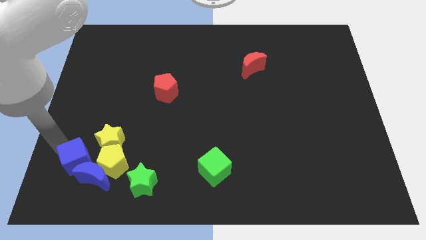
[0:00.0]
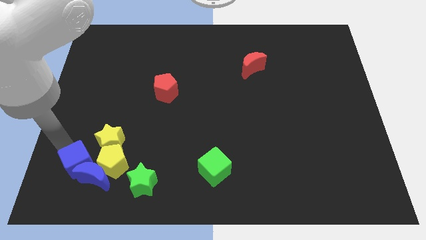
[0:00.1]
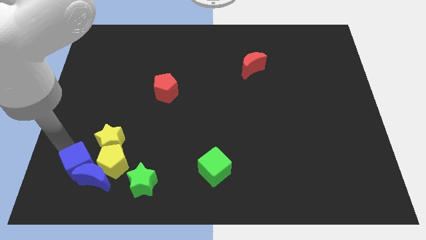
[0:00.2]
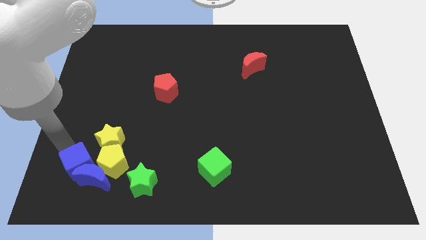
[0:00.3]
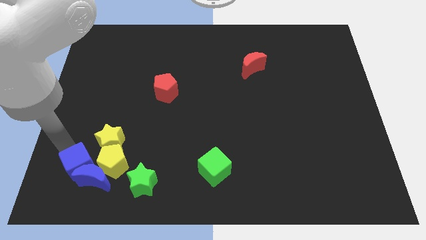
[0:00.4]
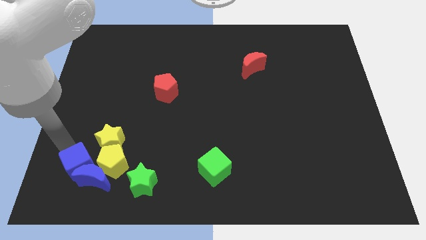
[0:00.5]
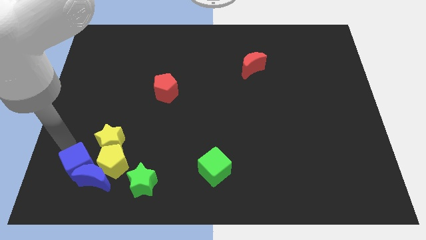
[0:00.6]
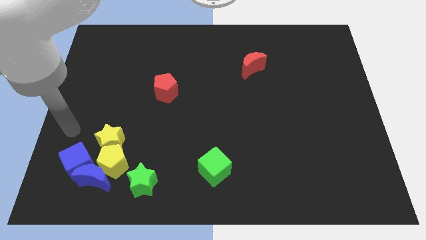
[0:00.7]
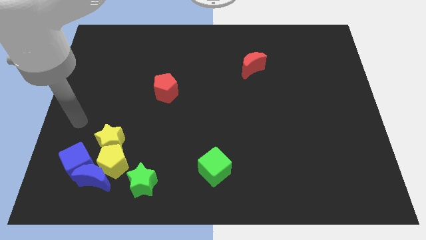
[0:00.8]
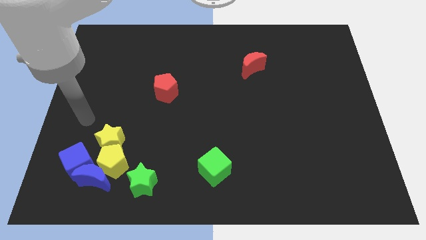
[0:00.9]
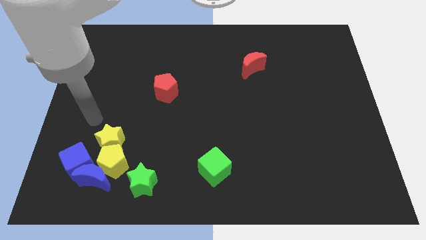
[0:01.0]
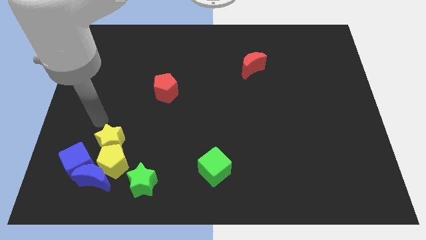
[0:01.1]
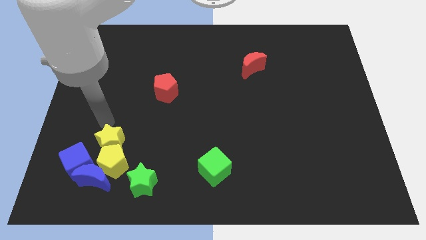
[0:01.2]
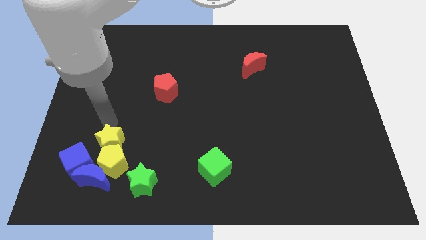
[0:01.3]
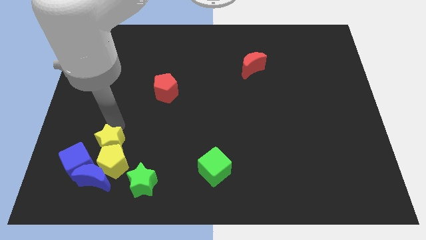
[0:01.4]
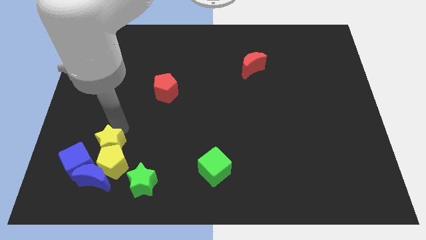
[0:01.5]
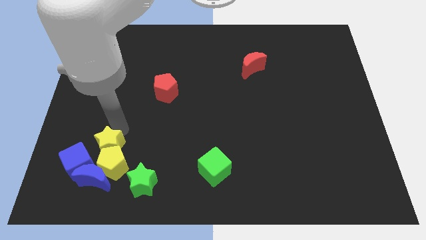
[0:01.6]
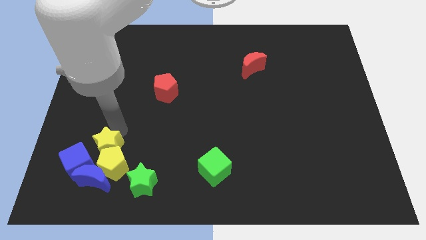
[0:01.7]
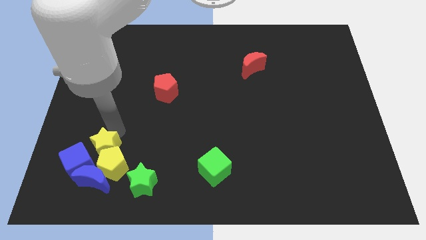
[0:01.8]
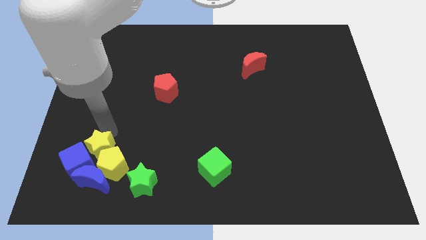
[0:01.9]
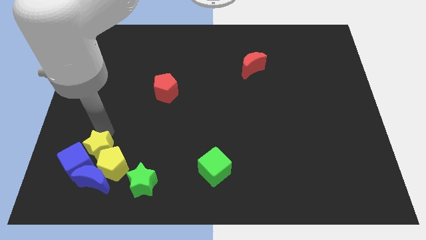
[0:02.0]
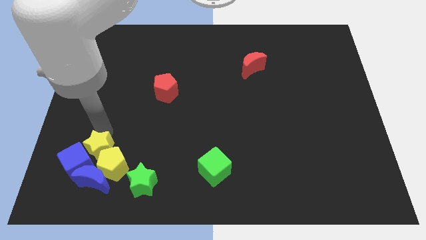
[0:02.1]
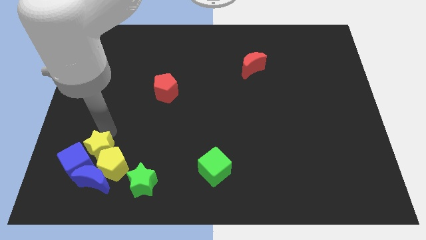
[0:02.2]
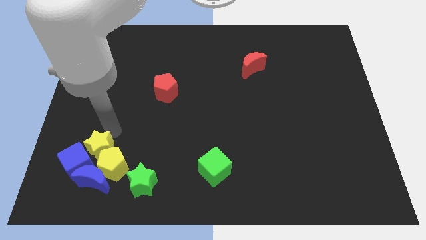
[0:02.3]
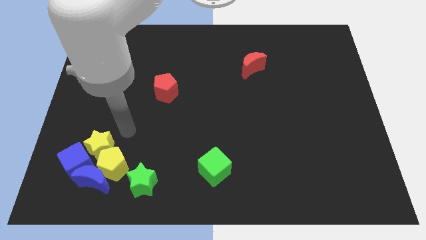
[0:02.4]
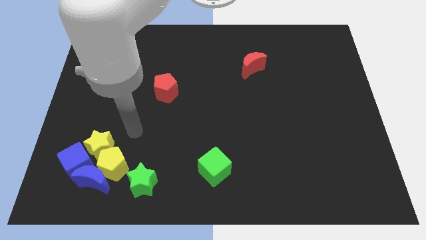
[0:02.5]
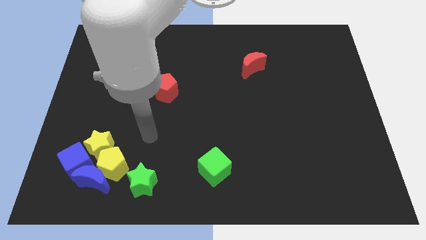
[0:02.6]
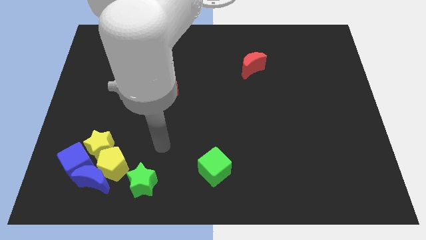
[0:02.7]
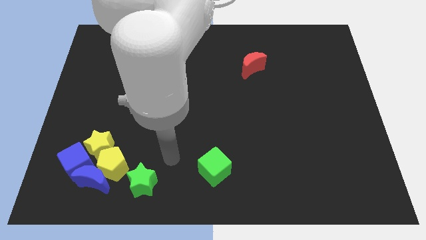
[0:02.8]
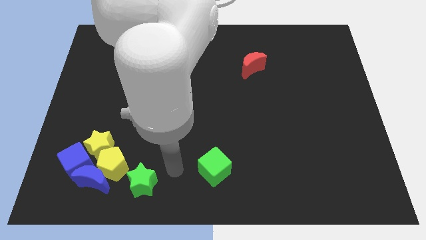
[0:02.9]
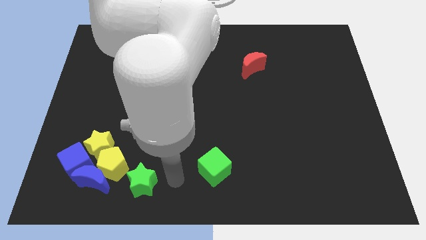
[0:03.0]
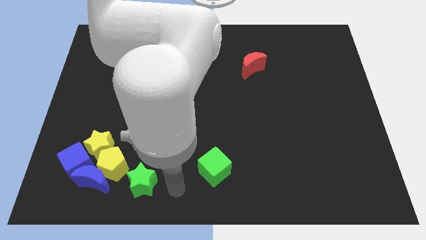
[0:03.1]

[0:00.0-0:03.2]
make a group of yellow and blue blocks

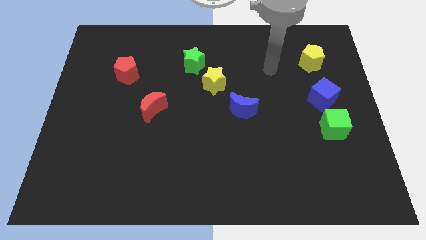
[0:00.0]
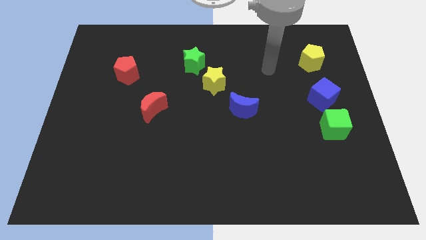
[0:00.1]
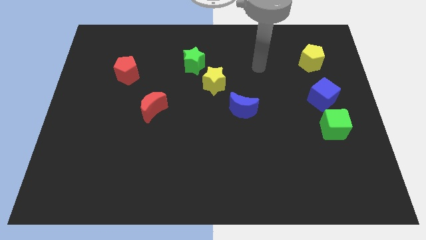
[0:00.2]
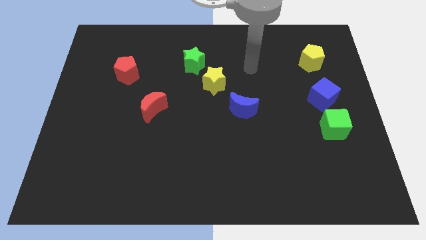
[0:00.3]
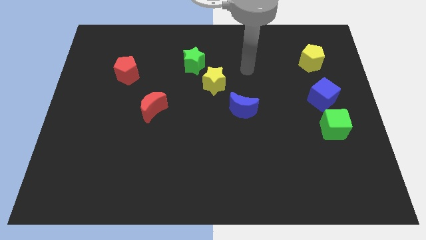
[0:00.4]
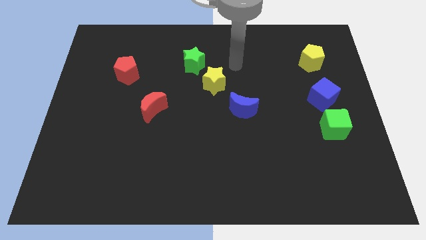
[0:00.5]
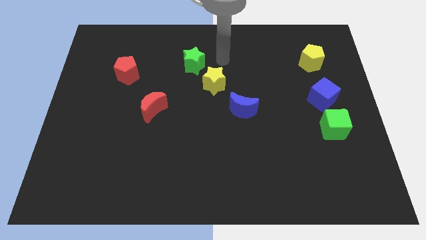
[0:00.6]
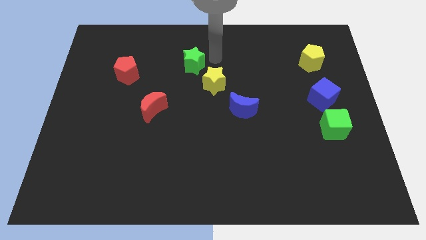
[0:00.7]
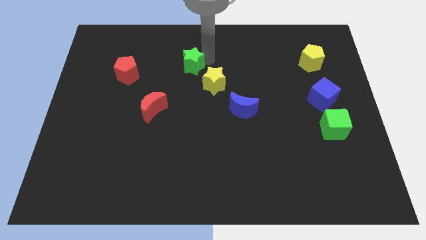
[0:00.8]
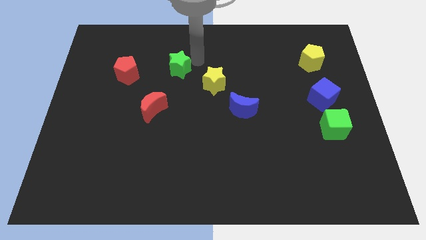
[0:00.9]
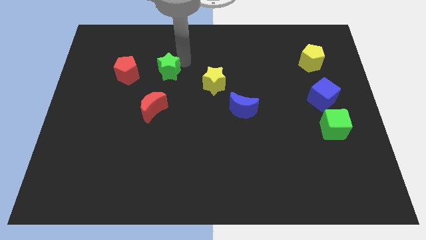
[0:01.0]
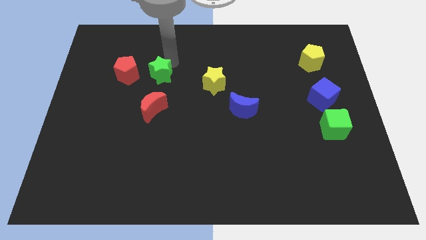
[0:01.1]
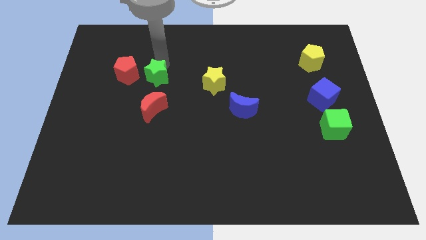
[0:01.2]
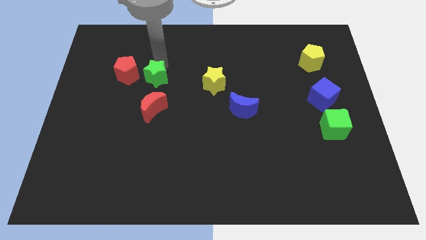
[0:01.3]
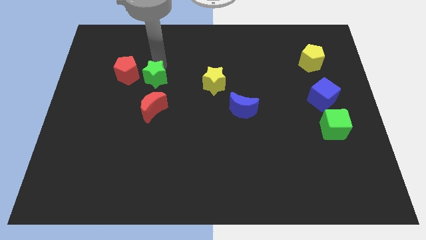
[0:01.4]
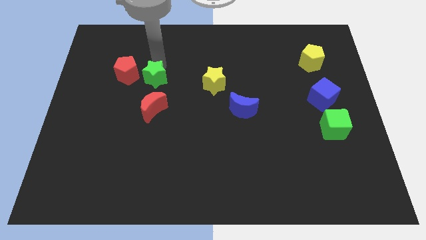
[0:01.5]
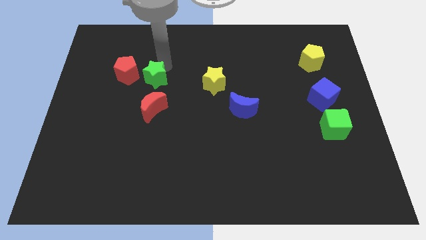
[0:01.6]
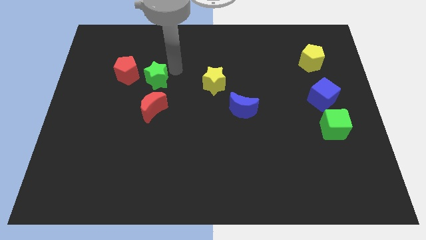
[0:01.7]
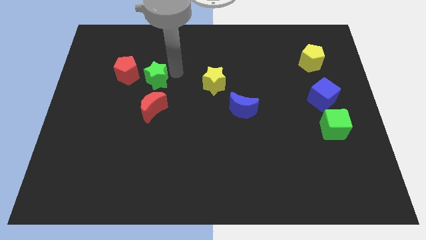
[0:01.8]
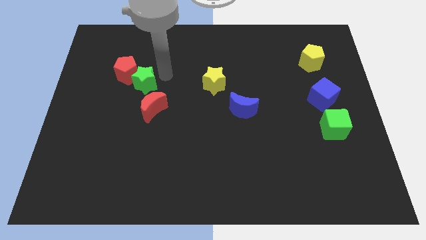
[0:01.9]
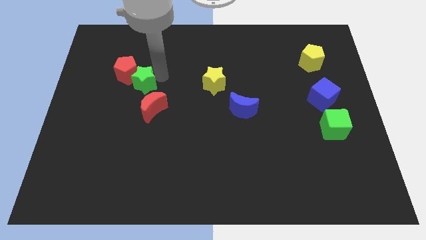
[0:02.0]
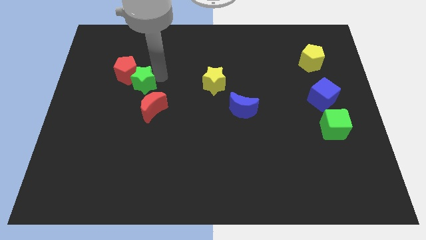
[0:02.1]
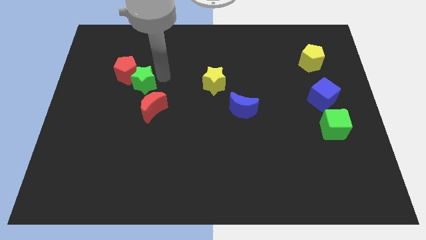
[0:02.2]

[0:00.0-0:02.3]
move the green star to the right bottom side of the red pentagon

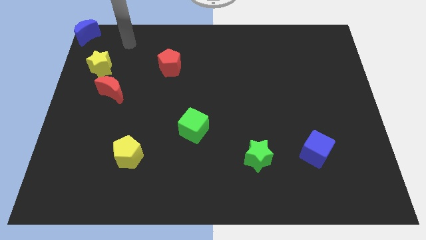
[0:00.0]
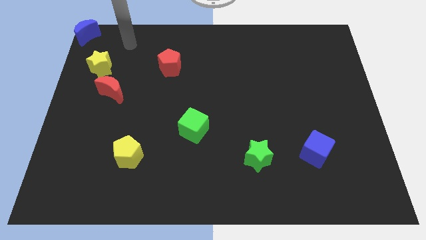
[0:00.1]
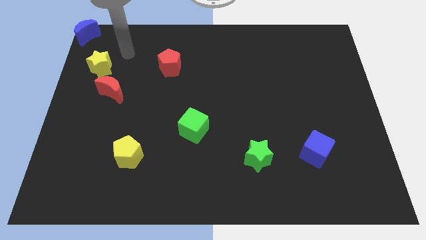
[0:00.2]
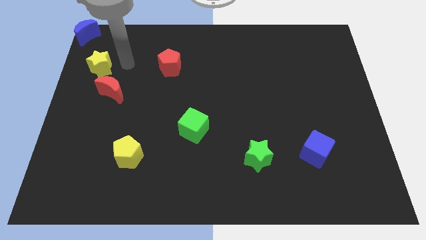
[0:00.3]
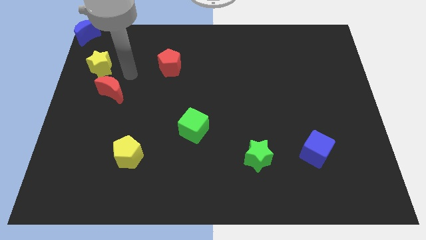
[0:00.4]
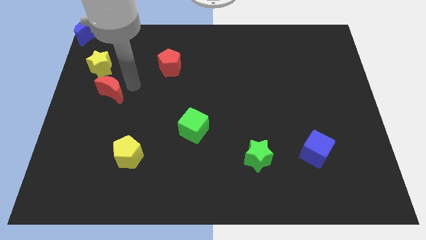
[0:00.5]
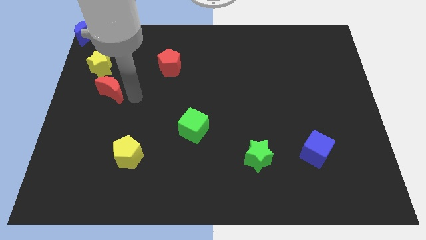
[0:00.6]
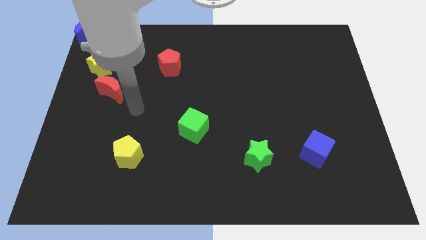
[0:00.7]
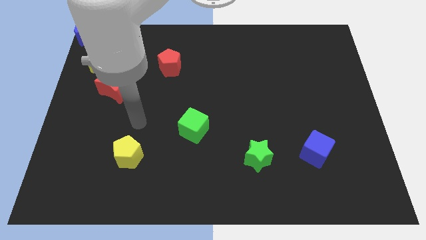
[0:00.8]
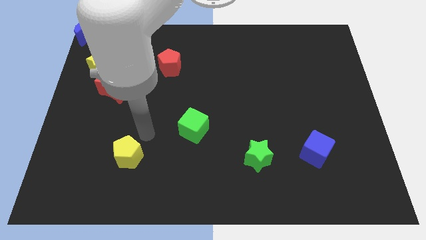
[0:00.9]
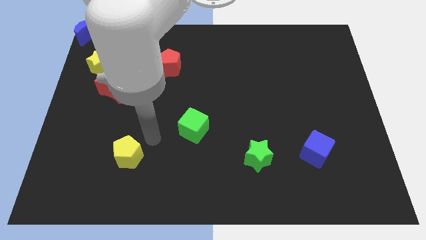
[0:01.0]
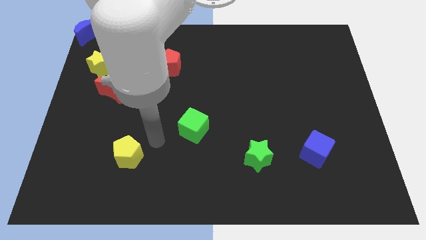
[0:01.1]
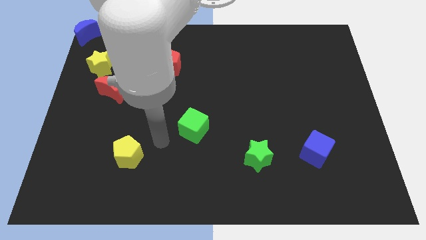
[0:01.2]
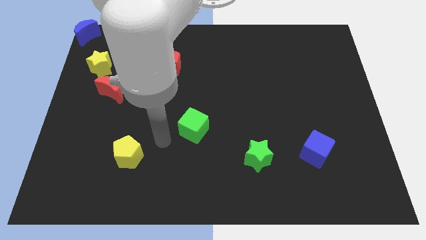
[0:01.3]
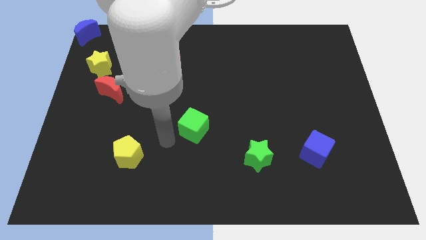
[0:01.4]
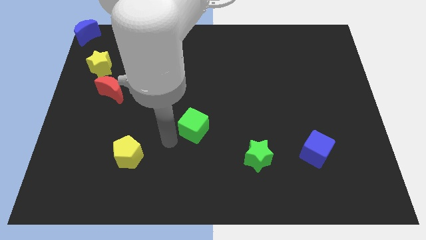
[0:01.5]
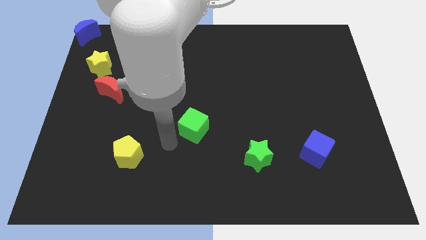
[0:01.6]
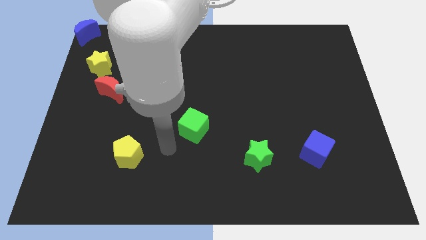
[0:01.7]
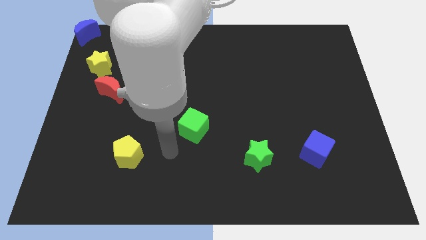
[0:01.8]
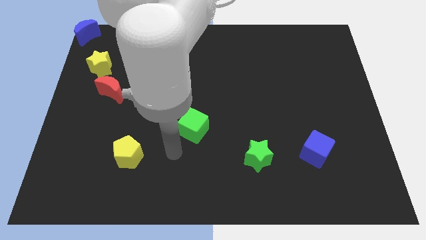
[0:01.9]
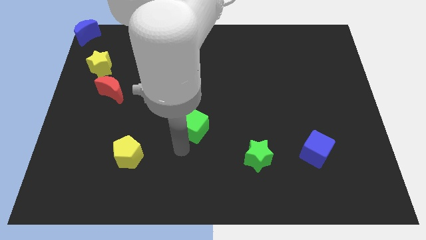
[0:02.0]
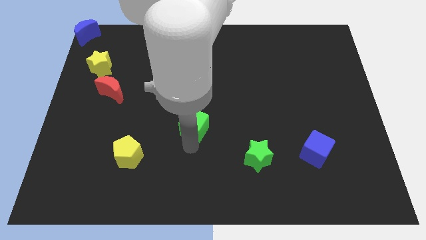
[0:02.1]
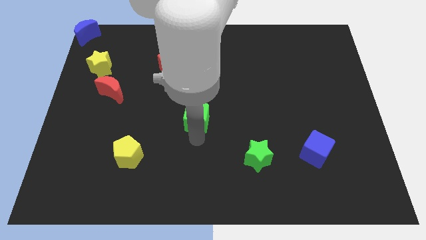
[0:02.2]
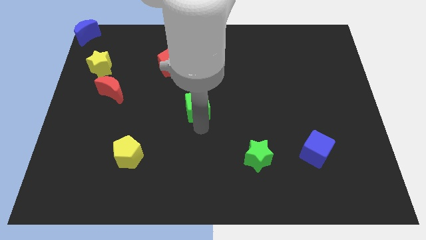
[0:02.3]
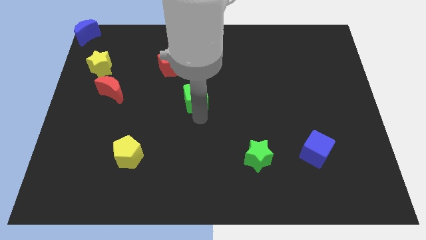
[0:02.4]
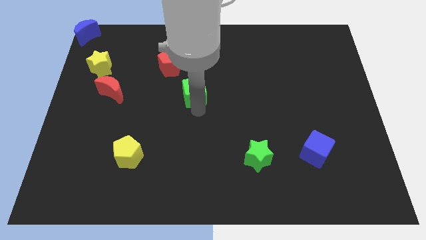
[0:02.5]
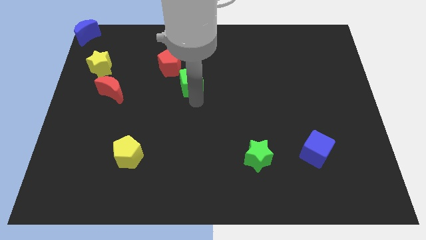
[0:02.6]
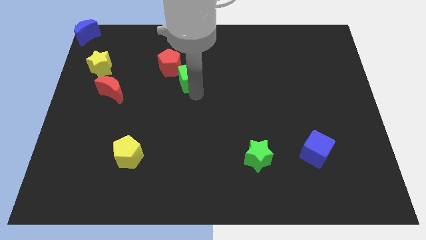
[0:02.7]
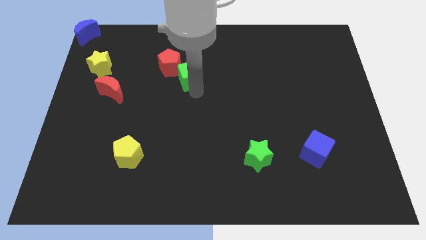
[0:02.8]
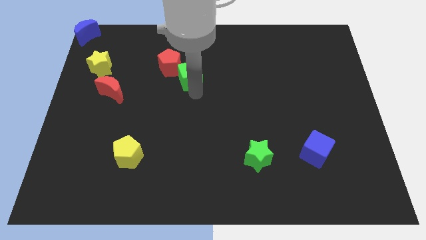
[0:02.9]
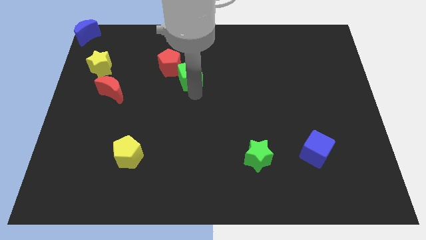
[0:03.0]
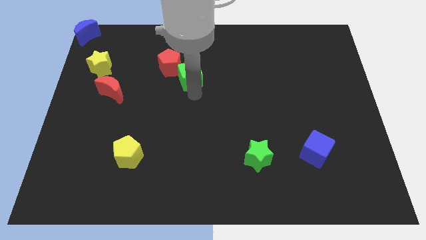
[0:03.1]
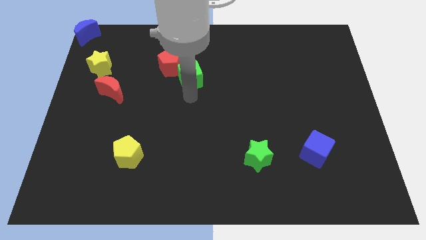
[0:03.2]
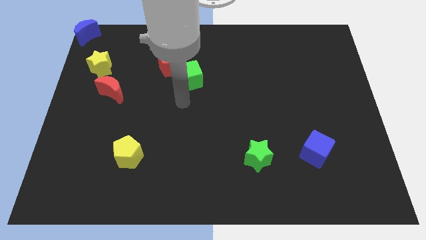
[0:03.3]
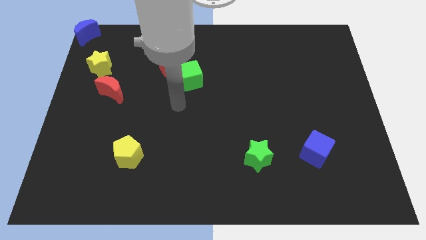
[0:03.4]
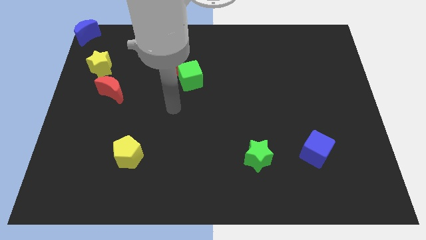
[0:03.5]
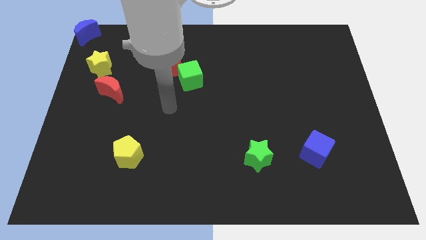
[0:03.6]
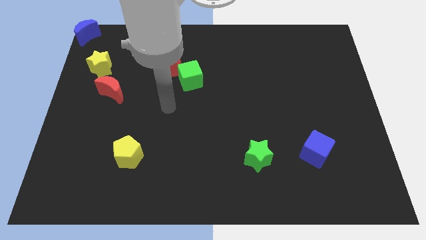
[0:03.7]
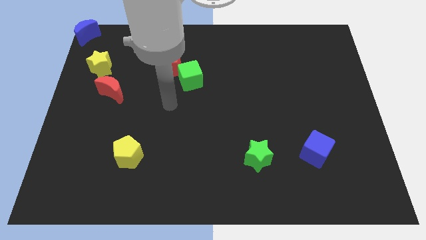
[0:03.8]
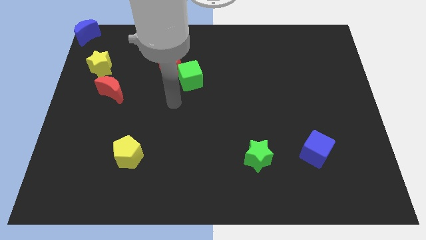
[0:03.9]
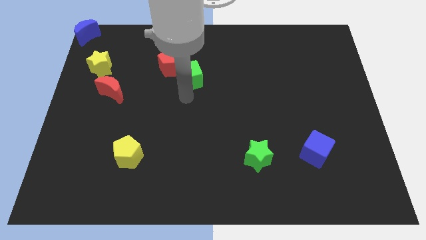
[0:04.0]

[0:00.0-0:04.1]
push the green cube into the red pentagon
